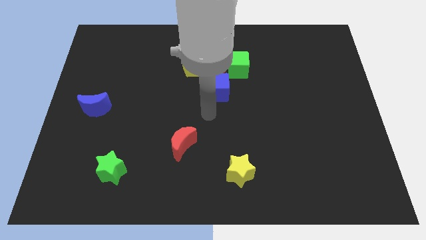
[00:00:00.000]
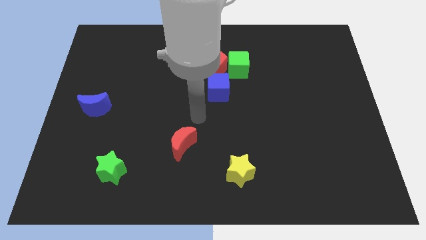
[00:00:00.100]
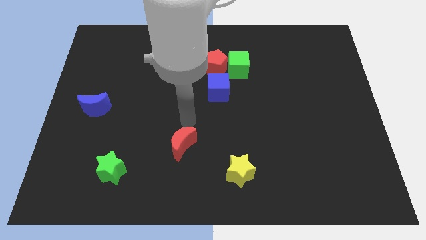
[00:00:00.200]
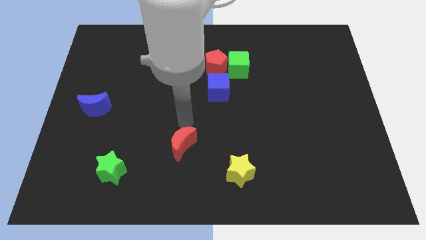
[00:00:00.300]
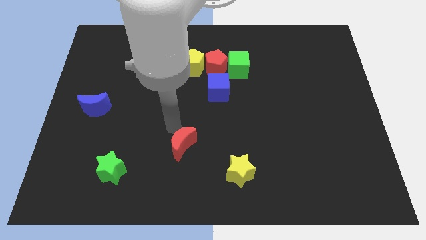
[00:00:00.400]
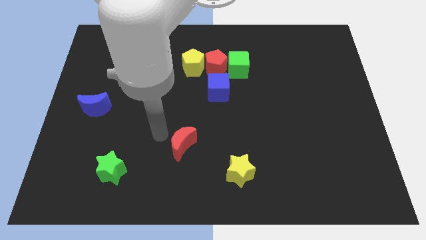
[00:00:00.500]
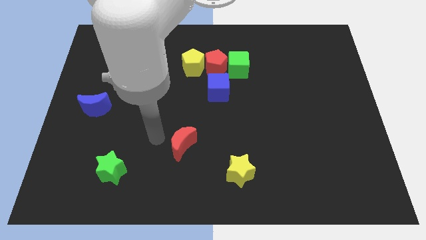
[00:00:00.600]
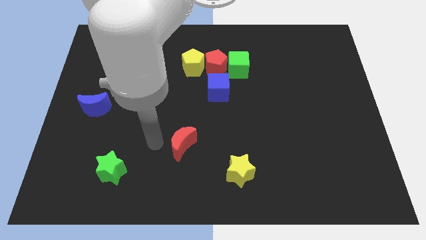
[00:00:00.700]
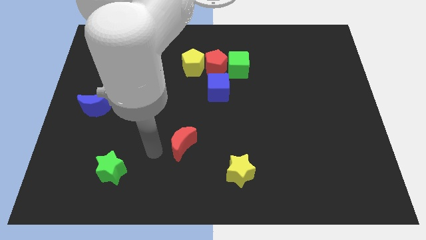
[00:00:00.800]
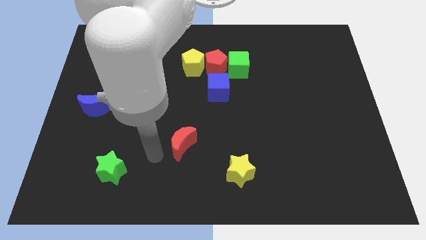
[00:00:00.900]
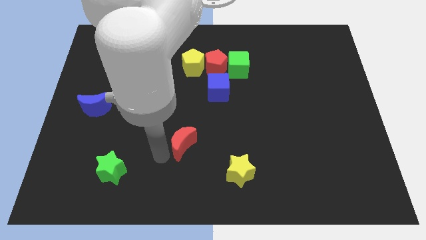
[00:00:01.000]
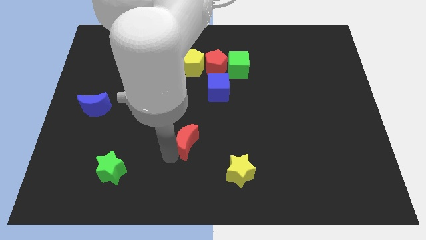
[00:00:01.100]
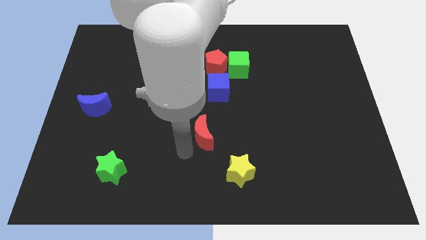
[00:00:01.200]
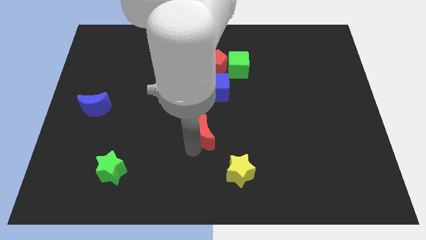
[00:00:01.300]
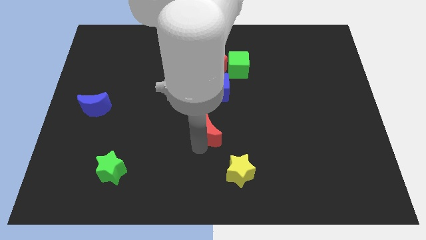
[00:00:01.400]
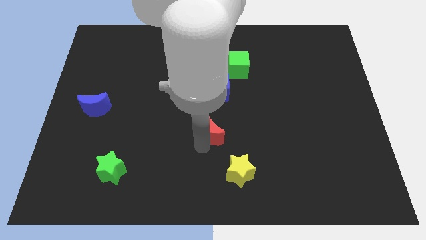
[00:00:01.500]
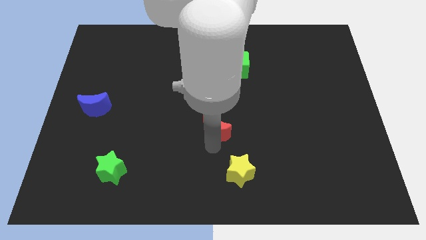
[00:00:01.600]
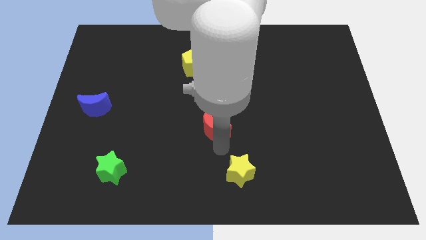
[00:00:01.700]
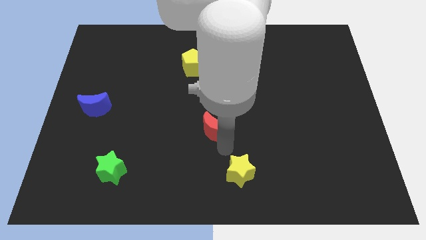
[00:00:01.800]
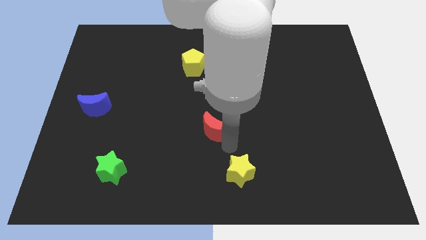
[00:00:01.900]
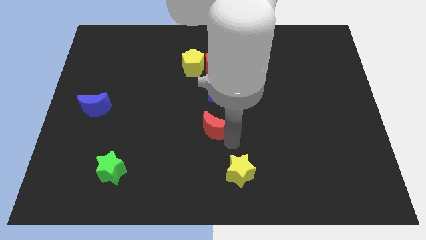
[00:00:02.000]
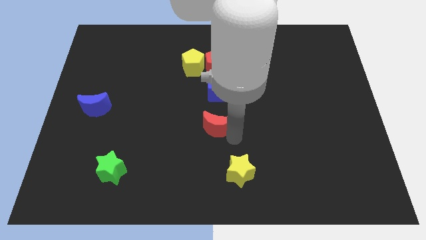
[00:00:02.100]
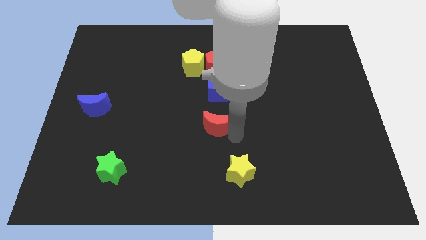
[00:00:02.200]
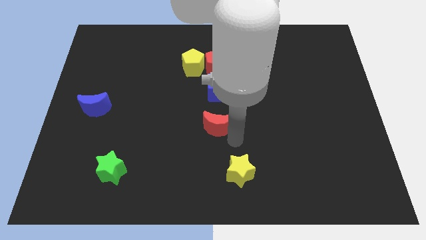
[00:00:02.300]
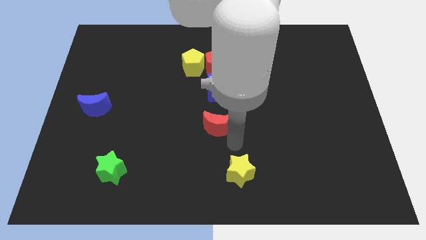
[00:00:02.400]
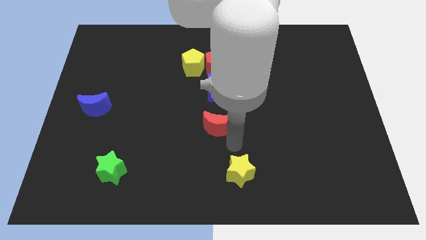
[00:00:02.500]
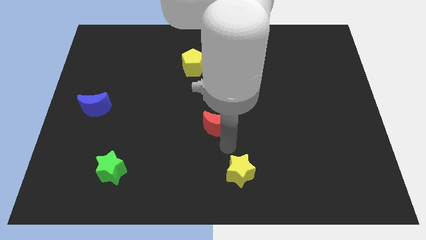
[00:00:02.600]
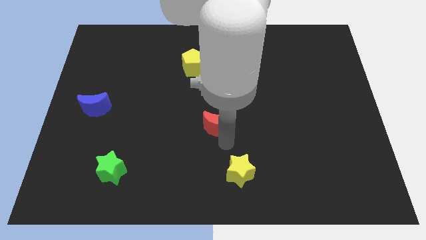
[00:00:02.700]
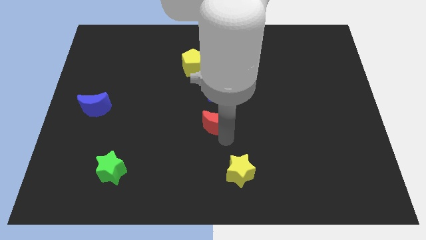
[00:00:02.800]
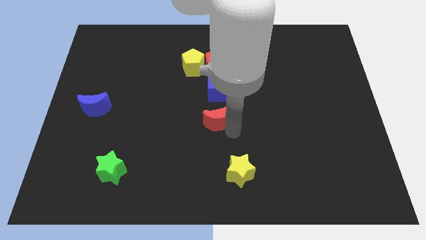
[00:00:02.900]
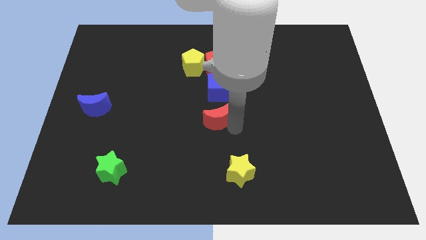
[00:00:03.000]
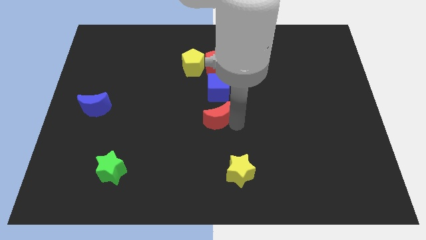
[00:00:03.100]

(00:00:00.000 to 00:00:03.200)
move the blue moon vertically below the blue cube

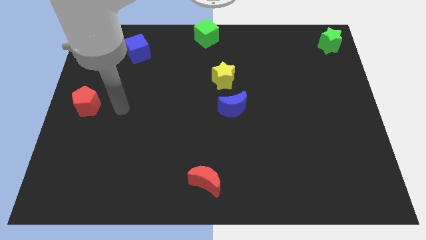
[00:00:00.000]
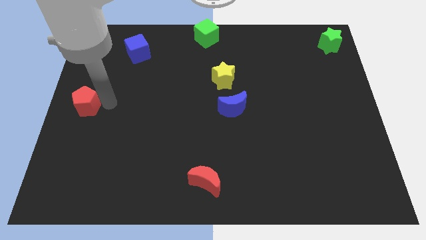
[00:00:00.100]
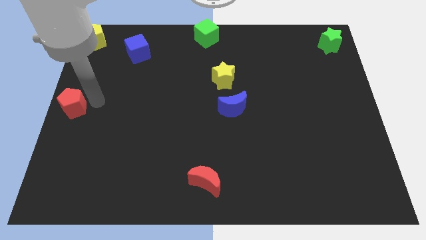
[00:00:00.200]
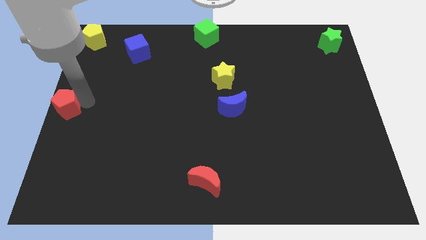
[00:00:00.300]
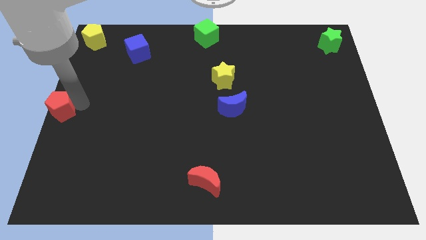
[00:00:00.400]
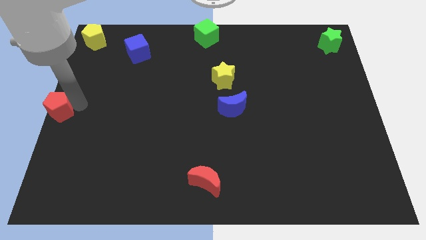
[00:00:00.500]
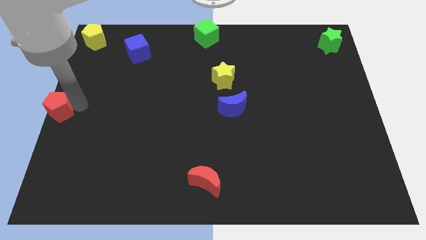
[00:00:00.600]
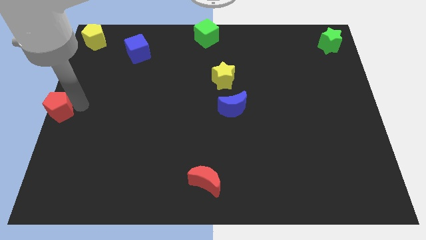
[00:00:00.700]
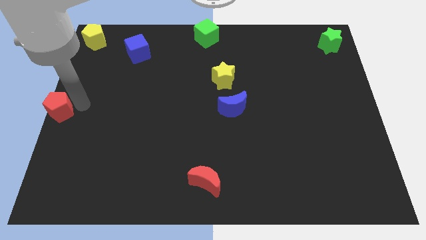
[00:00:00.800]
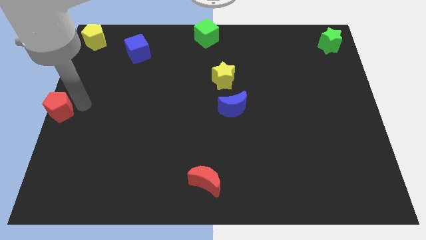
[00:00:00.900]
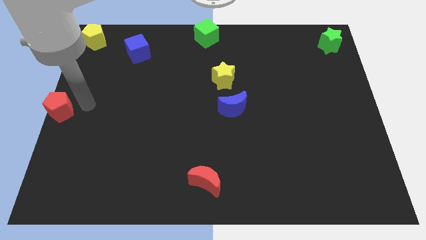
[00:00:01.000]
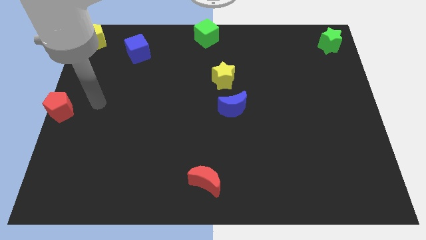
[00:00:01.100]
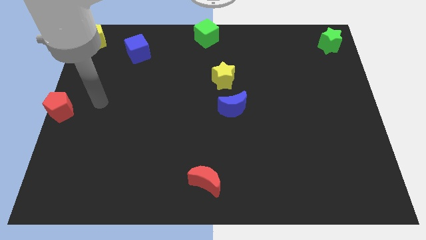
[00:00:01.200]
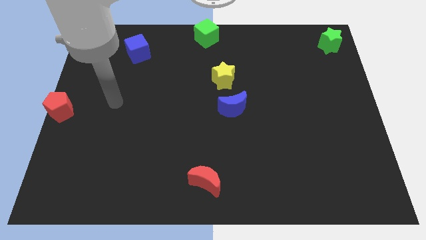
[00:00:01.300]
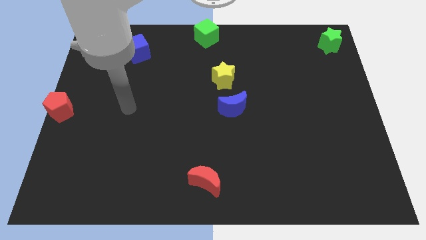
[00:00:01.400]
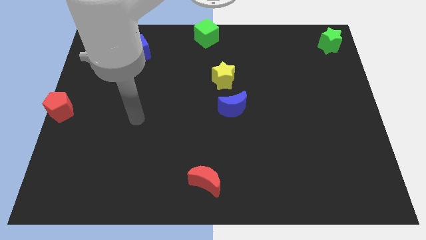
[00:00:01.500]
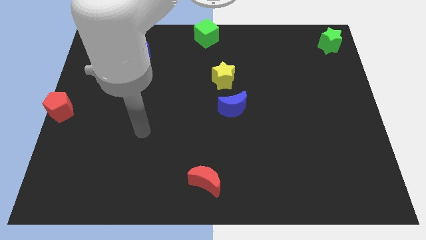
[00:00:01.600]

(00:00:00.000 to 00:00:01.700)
push the red block to left center of the board

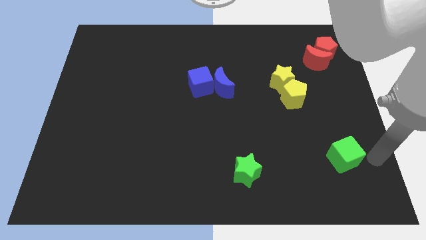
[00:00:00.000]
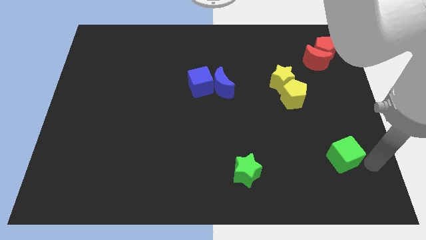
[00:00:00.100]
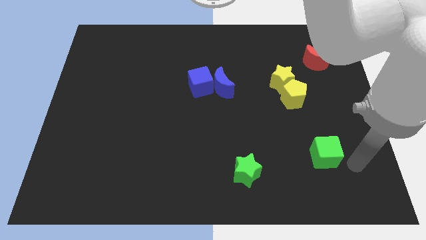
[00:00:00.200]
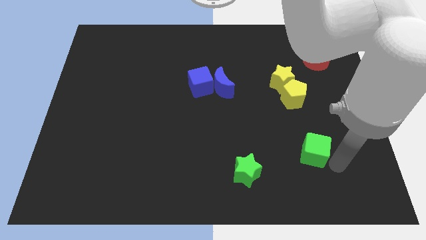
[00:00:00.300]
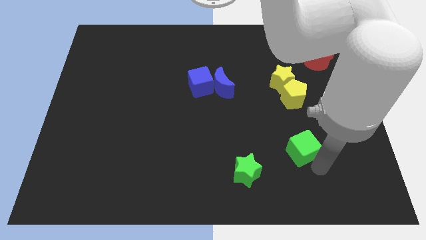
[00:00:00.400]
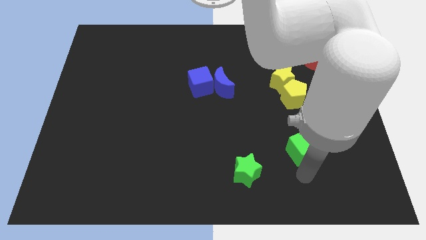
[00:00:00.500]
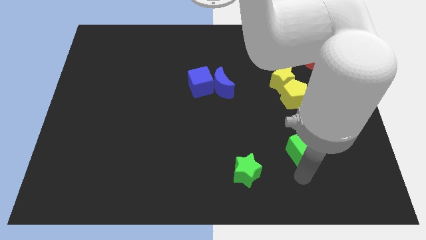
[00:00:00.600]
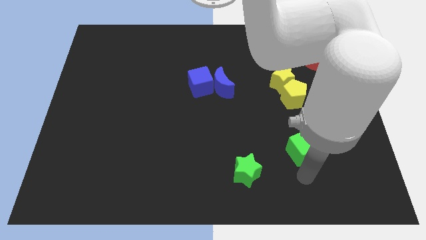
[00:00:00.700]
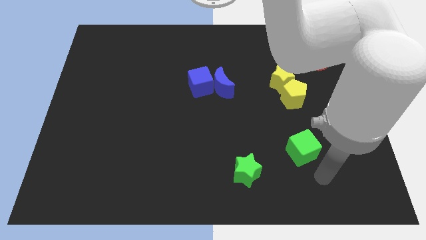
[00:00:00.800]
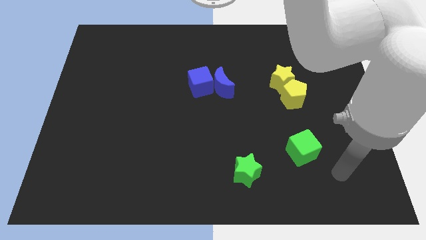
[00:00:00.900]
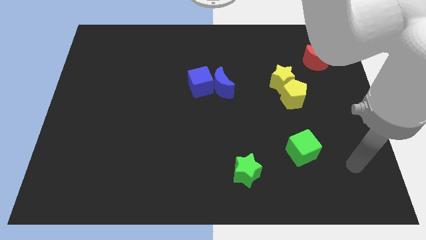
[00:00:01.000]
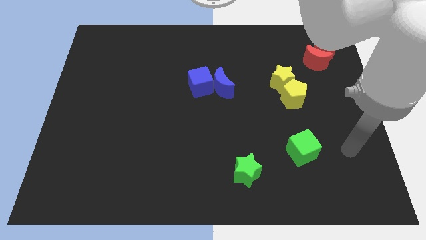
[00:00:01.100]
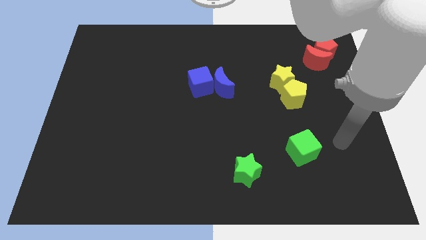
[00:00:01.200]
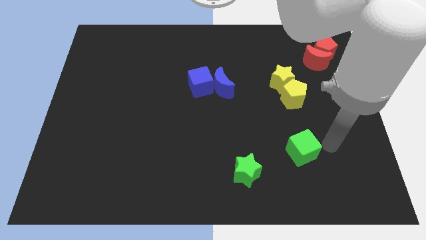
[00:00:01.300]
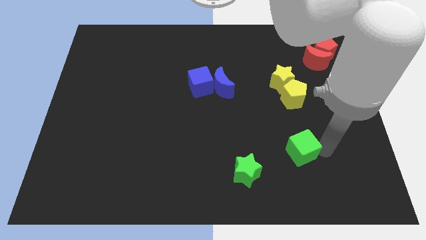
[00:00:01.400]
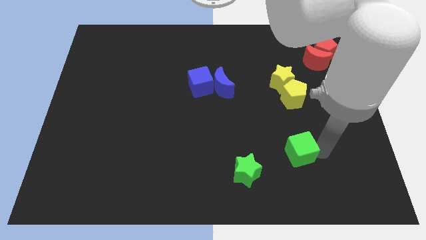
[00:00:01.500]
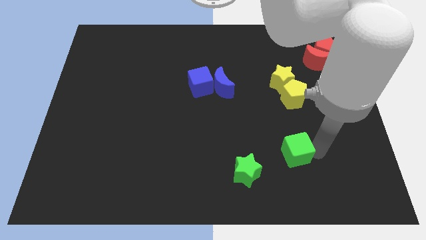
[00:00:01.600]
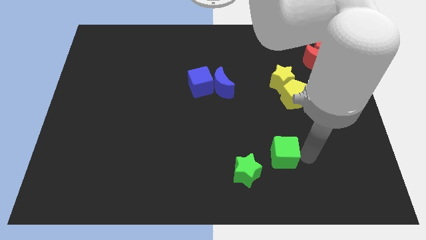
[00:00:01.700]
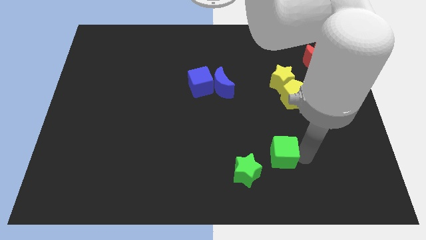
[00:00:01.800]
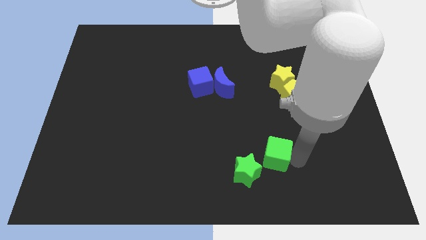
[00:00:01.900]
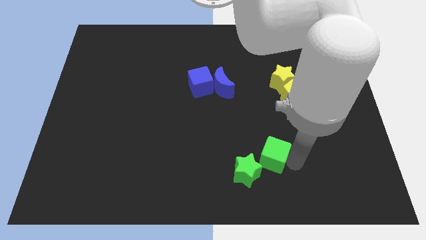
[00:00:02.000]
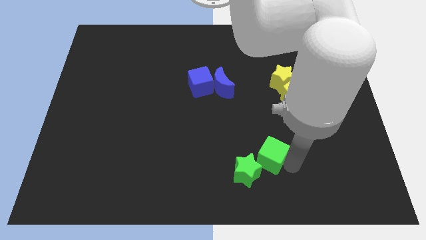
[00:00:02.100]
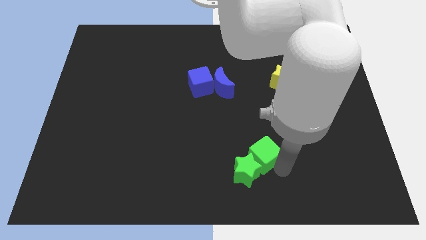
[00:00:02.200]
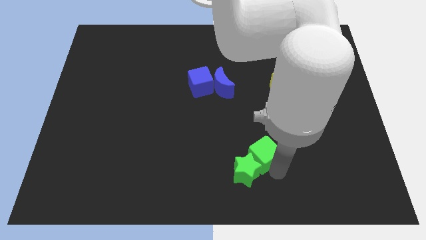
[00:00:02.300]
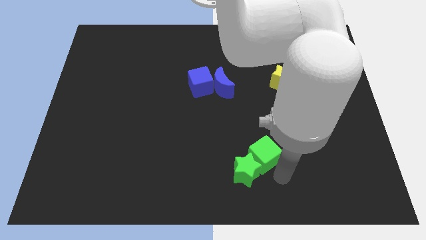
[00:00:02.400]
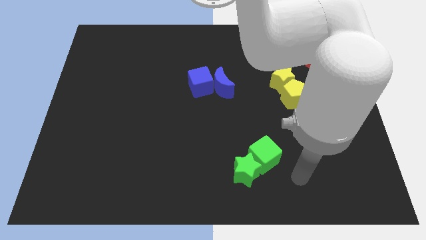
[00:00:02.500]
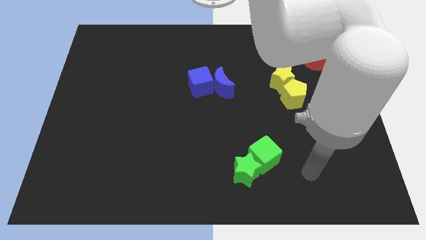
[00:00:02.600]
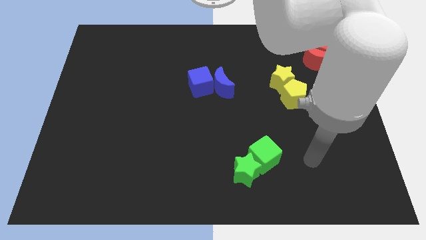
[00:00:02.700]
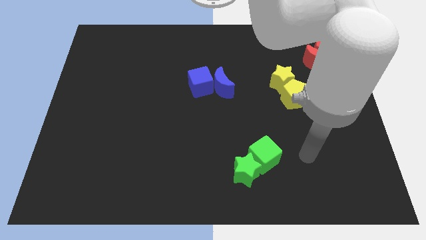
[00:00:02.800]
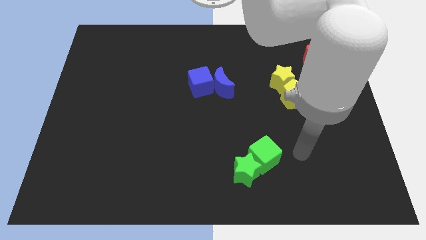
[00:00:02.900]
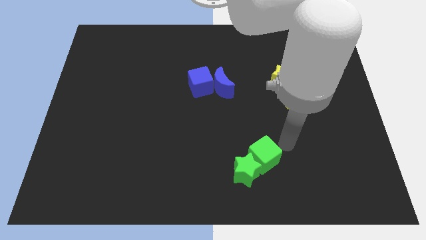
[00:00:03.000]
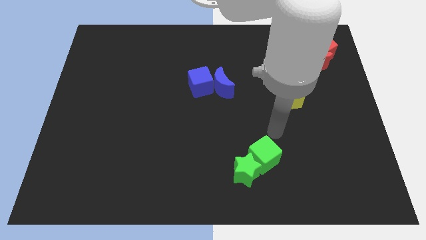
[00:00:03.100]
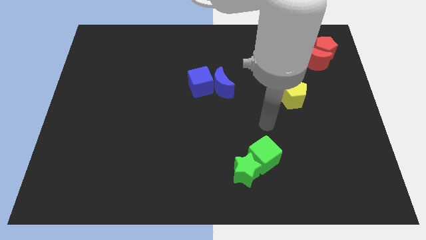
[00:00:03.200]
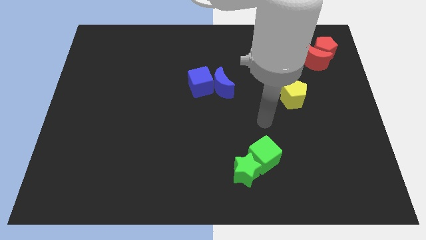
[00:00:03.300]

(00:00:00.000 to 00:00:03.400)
move green cube towards the green star

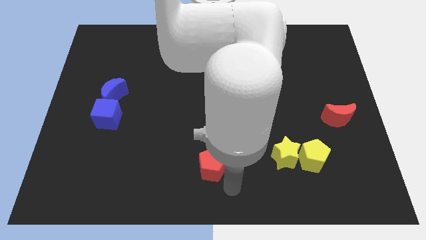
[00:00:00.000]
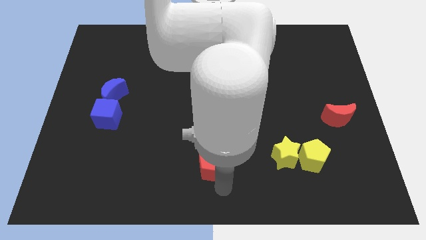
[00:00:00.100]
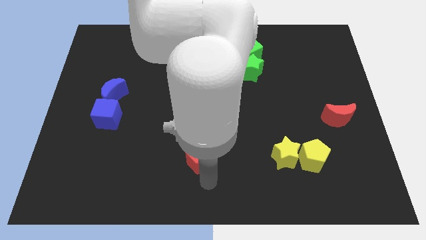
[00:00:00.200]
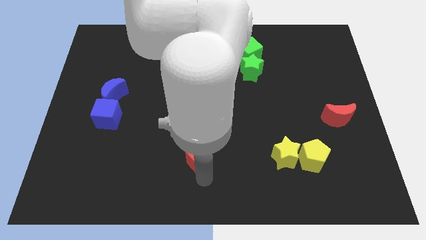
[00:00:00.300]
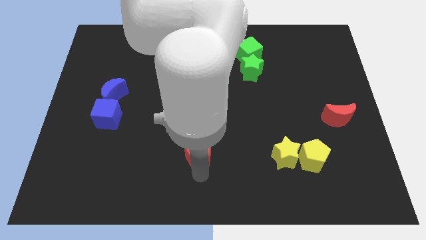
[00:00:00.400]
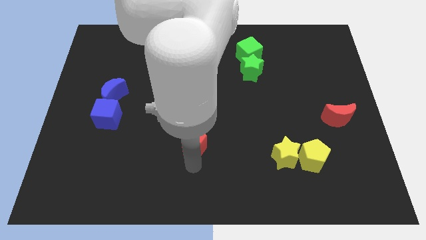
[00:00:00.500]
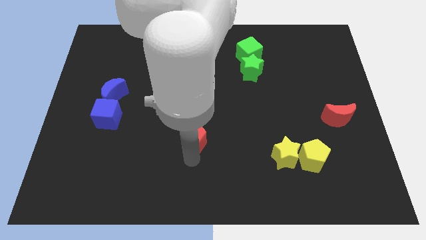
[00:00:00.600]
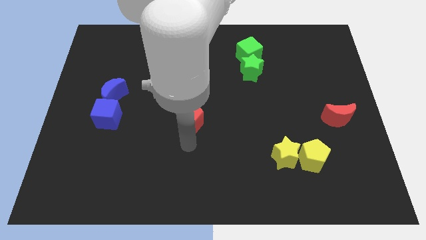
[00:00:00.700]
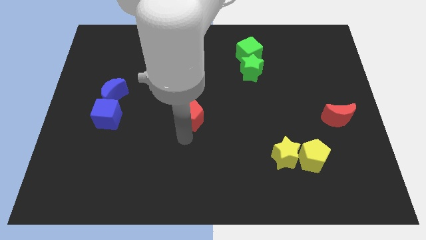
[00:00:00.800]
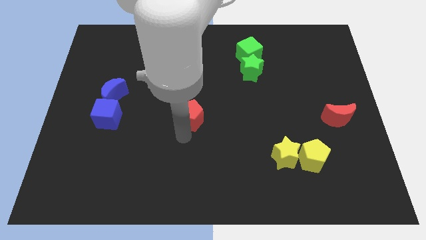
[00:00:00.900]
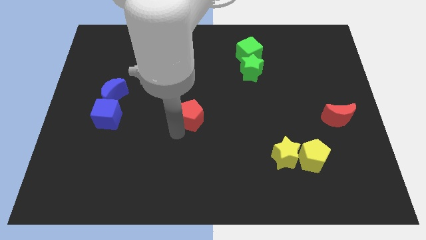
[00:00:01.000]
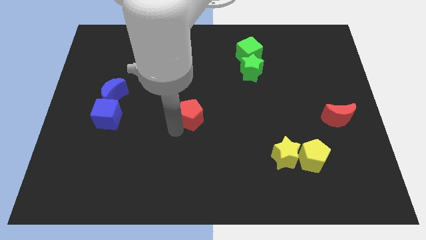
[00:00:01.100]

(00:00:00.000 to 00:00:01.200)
put the red pentagon horizontally to the right side of the blue cube
